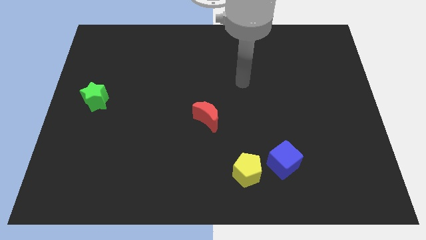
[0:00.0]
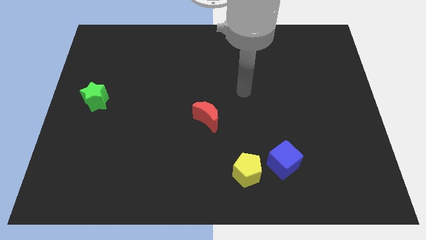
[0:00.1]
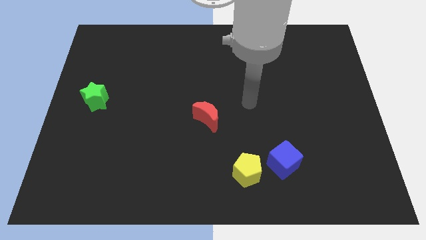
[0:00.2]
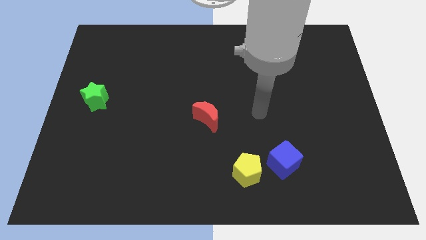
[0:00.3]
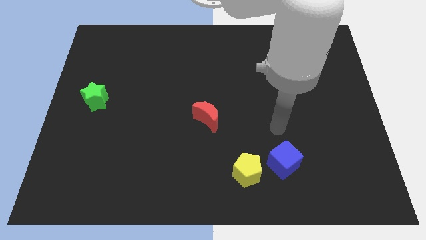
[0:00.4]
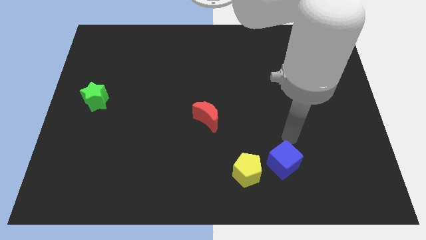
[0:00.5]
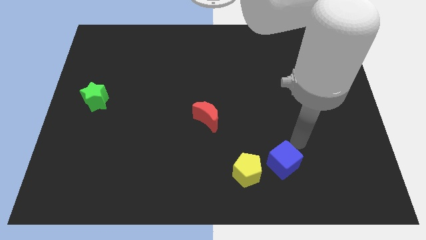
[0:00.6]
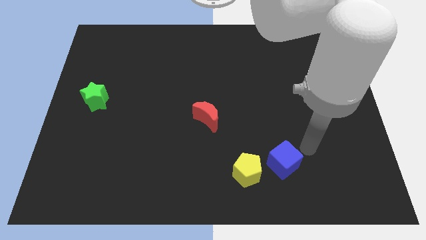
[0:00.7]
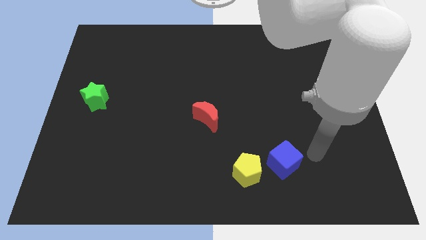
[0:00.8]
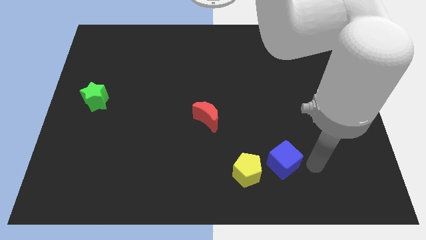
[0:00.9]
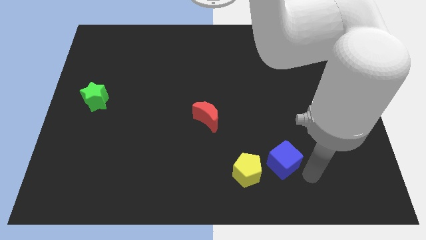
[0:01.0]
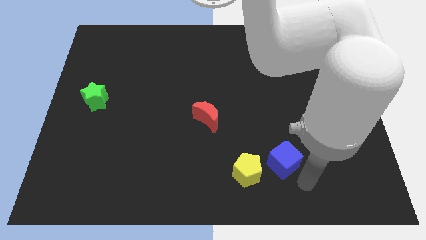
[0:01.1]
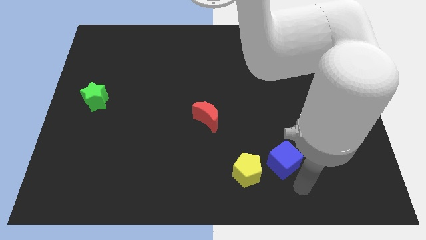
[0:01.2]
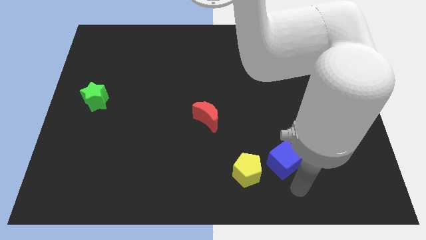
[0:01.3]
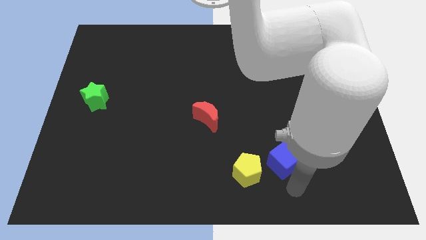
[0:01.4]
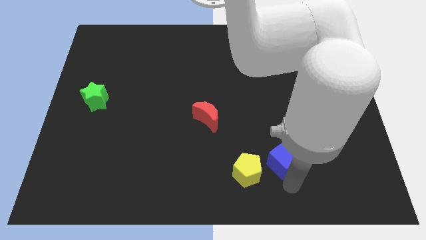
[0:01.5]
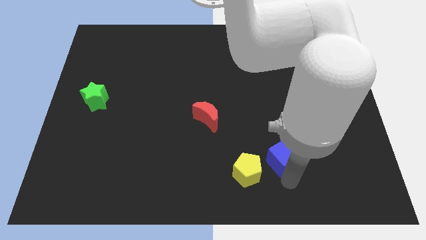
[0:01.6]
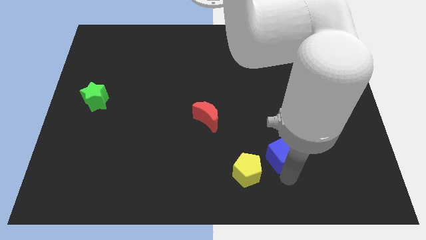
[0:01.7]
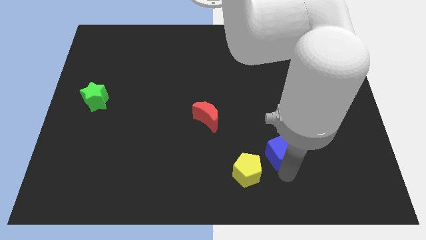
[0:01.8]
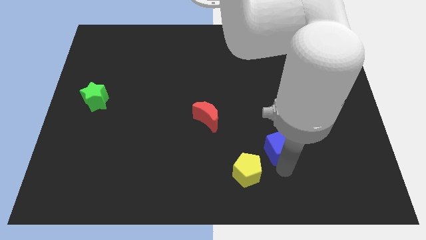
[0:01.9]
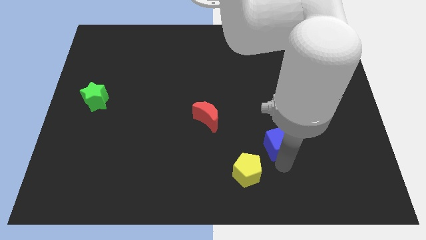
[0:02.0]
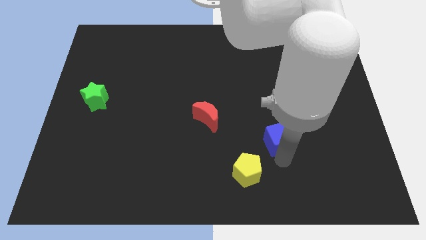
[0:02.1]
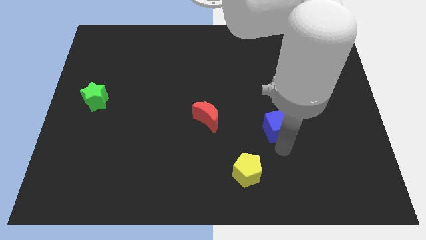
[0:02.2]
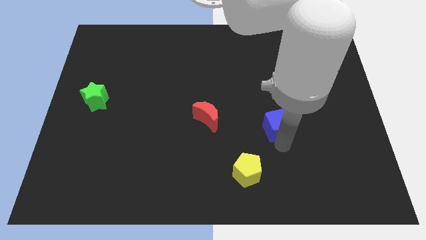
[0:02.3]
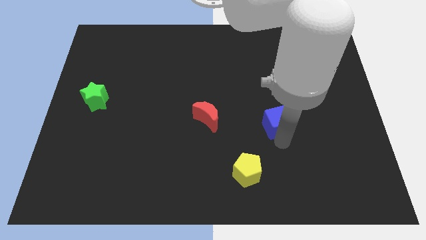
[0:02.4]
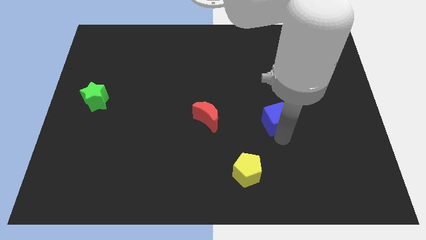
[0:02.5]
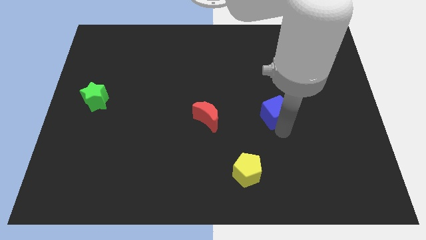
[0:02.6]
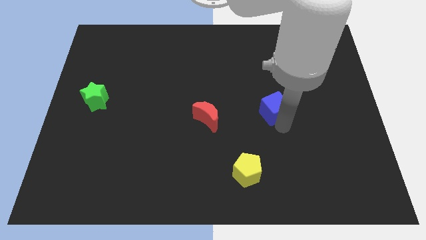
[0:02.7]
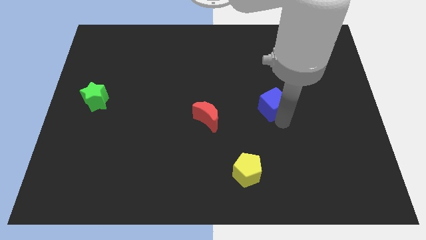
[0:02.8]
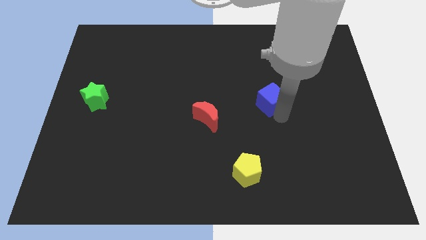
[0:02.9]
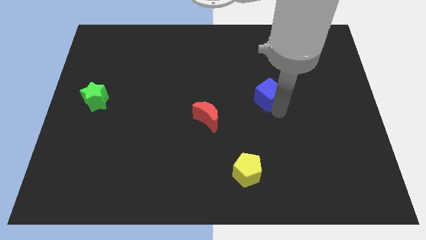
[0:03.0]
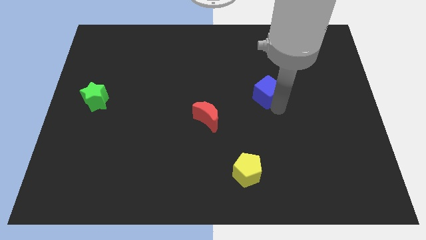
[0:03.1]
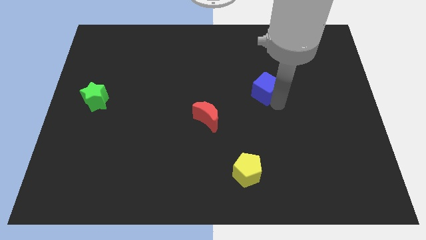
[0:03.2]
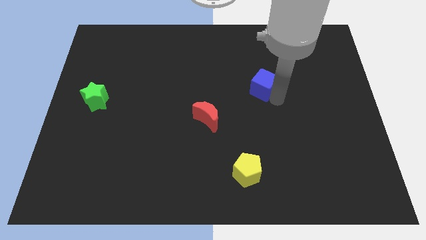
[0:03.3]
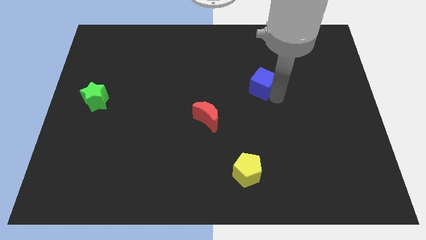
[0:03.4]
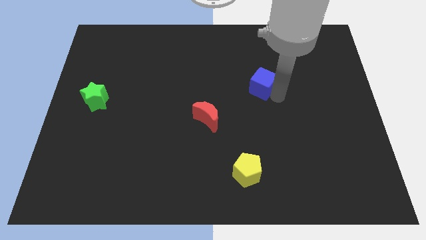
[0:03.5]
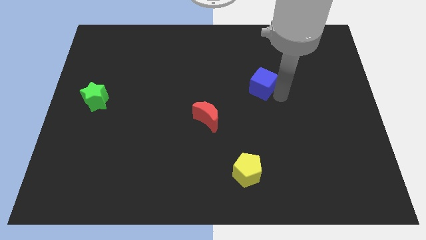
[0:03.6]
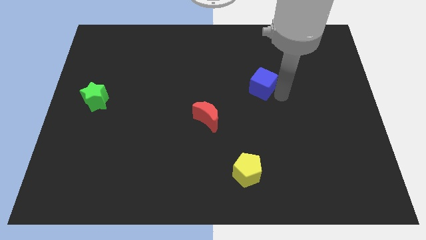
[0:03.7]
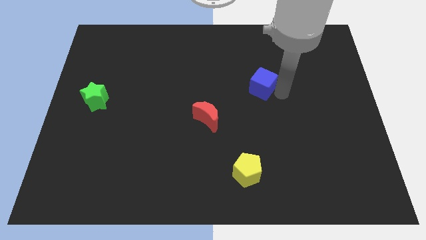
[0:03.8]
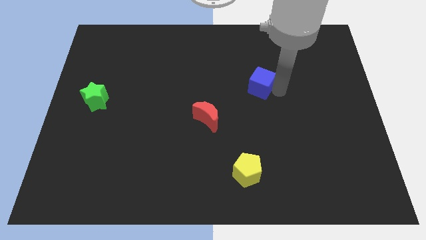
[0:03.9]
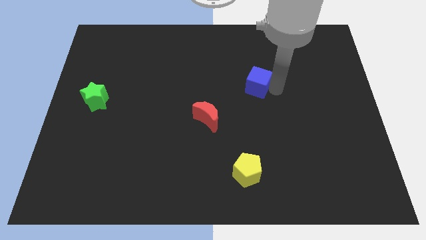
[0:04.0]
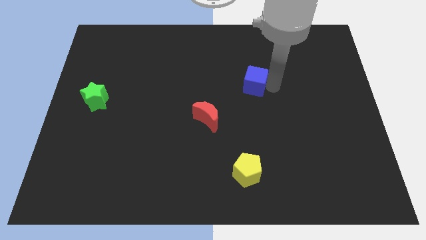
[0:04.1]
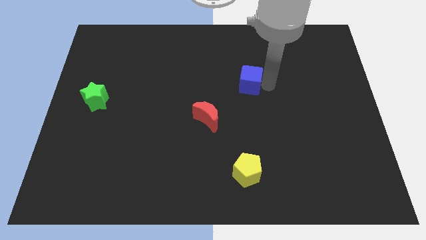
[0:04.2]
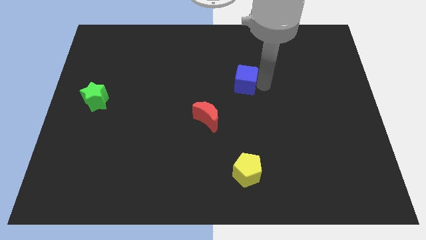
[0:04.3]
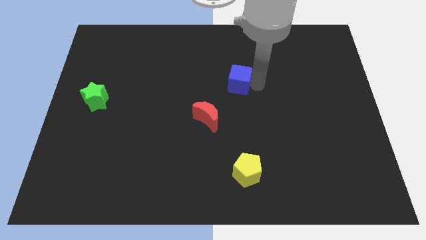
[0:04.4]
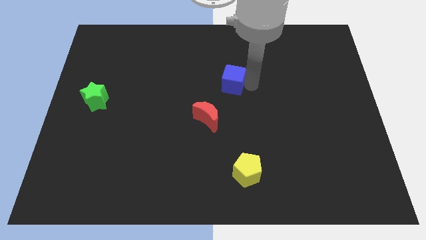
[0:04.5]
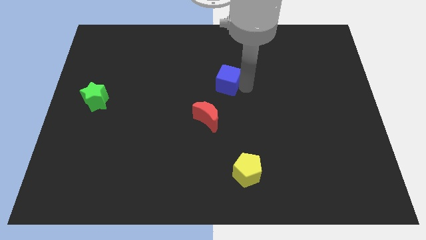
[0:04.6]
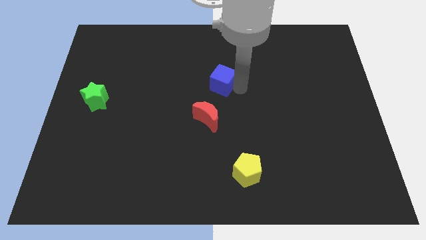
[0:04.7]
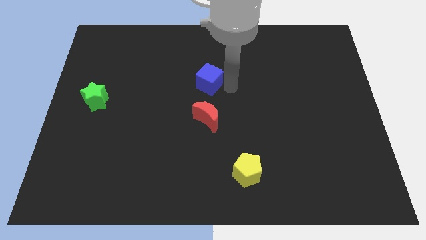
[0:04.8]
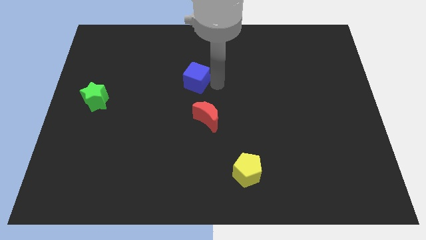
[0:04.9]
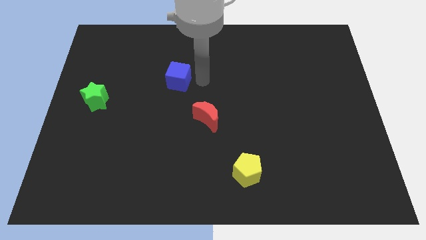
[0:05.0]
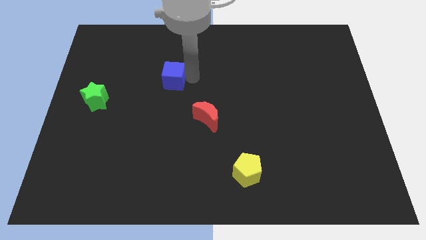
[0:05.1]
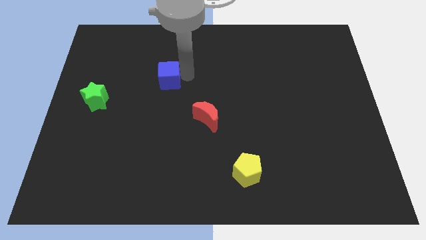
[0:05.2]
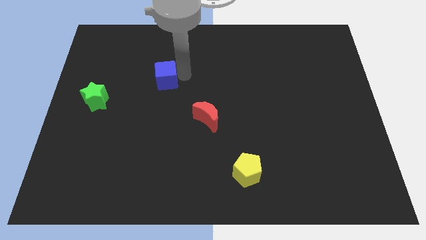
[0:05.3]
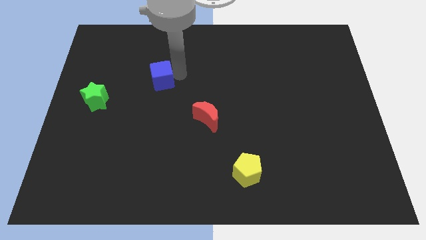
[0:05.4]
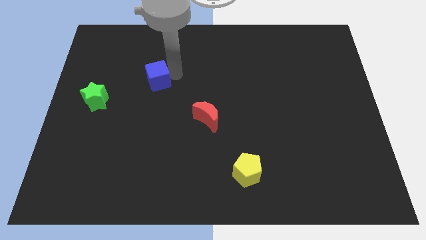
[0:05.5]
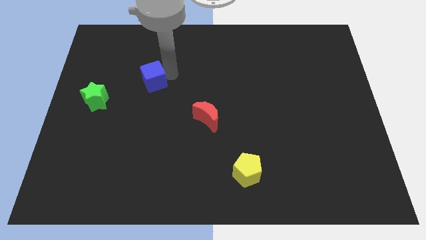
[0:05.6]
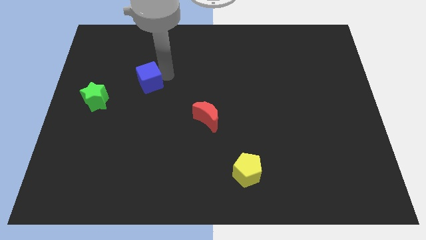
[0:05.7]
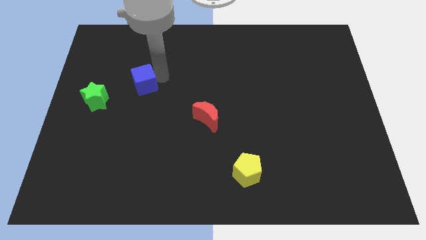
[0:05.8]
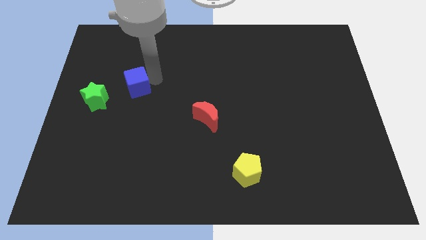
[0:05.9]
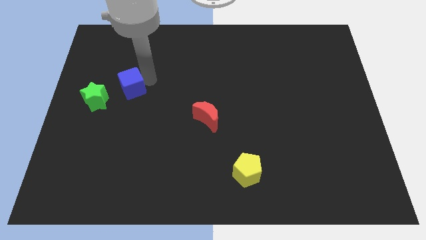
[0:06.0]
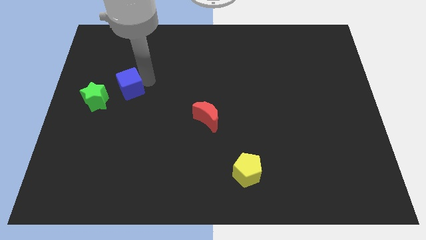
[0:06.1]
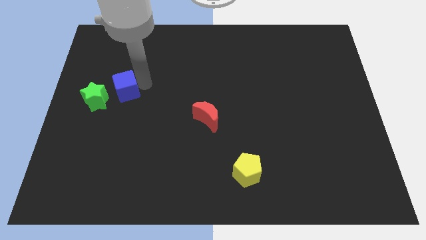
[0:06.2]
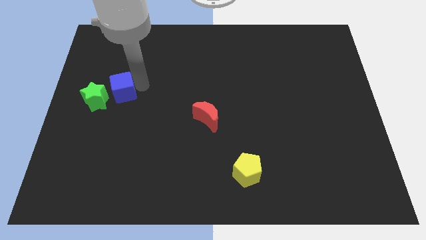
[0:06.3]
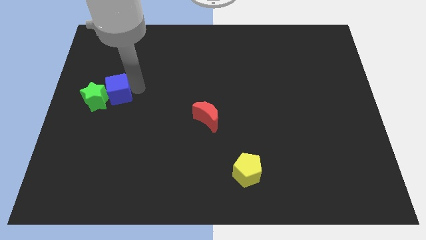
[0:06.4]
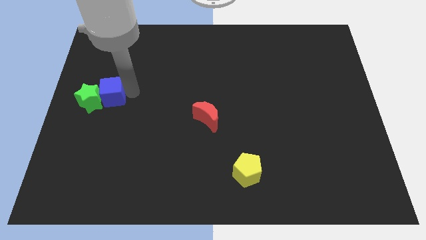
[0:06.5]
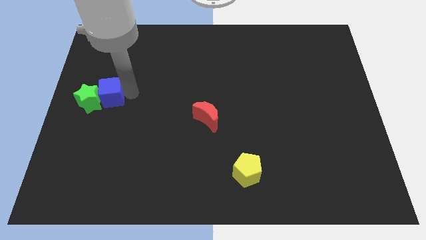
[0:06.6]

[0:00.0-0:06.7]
put the cube to the green block

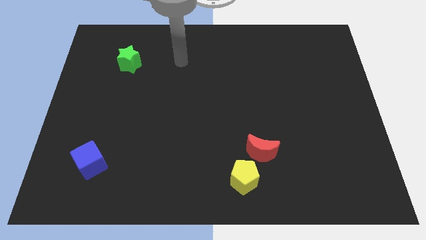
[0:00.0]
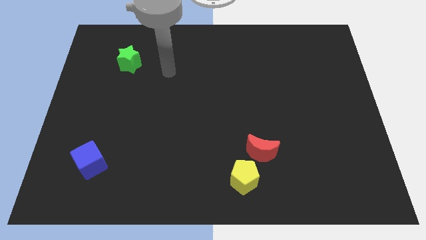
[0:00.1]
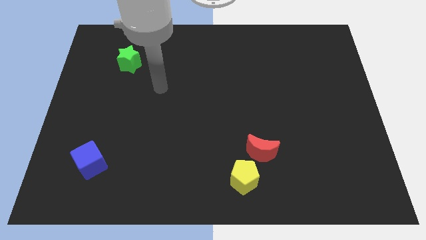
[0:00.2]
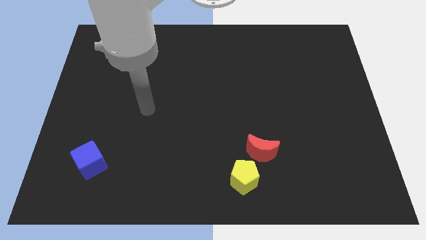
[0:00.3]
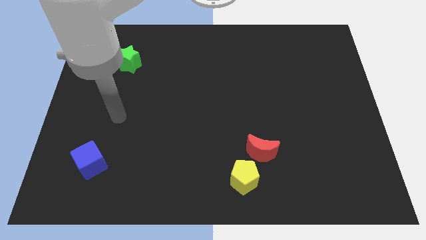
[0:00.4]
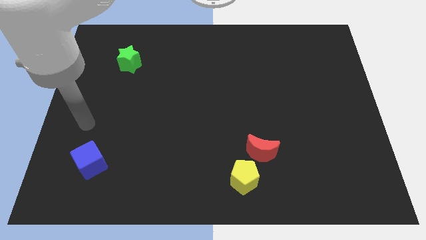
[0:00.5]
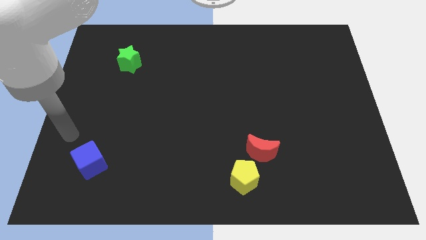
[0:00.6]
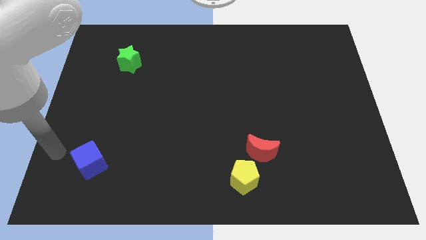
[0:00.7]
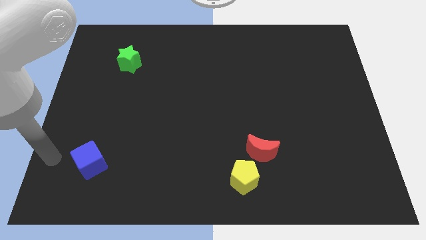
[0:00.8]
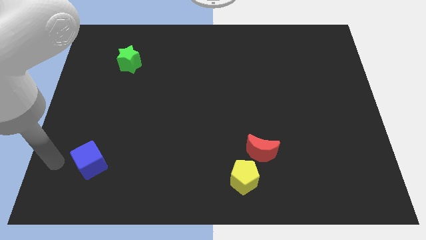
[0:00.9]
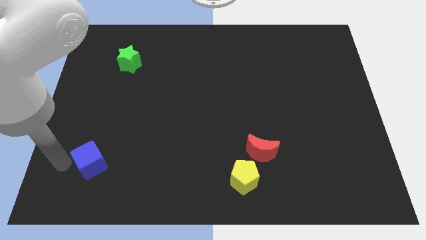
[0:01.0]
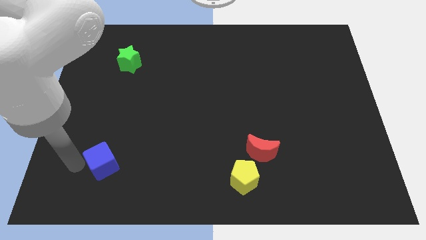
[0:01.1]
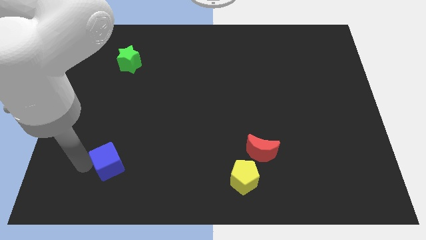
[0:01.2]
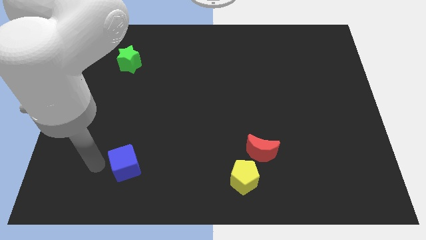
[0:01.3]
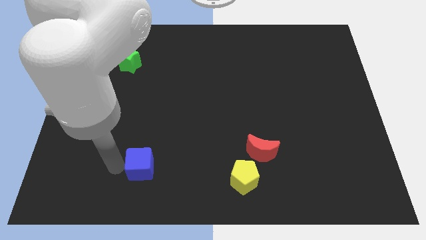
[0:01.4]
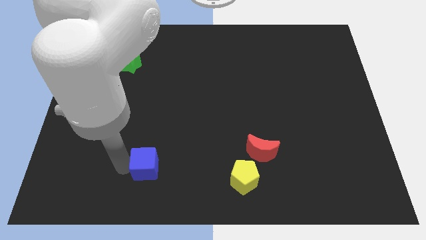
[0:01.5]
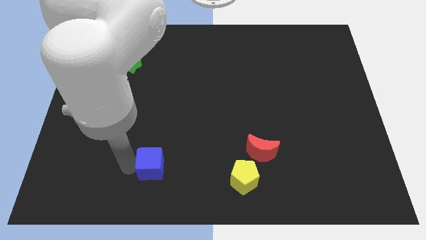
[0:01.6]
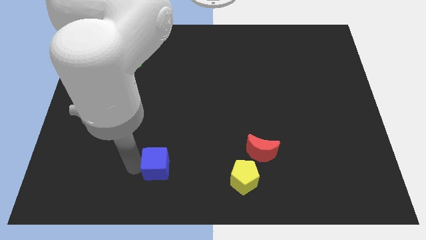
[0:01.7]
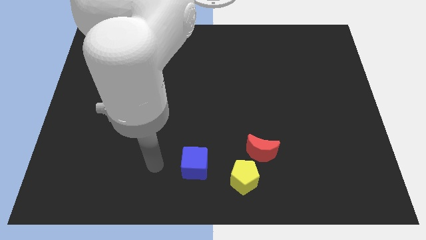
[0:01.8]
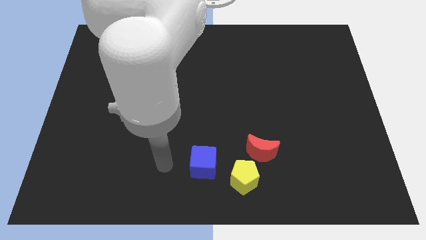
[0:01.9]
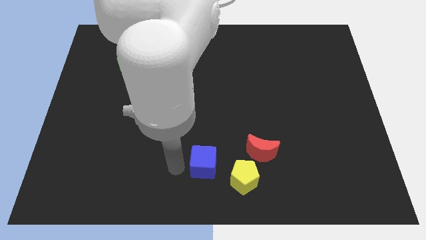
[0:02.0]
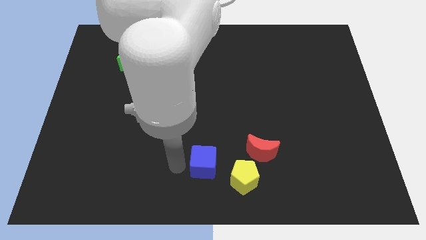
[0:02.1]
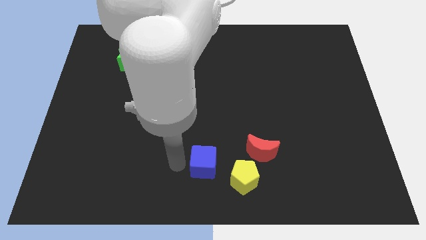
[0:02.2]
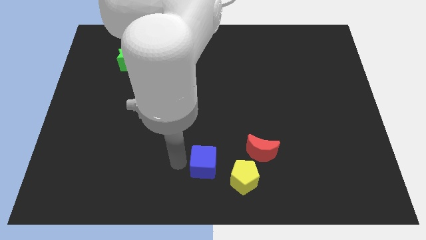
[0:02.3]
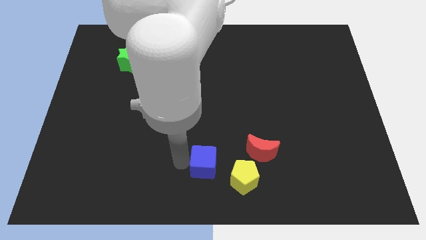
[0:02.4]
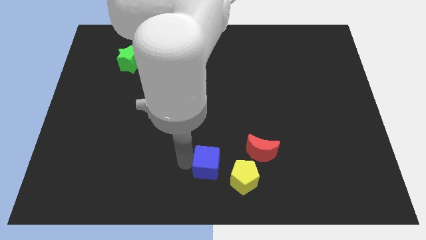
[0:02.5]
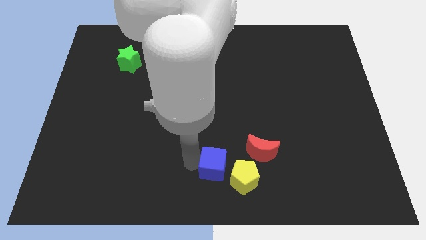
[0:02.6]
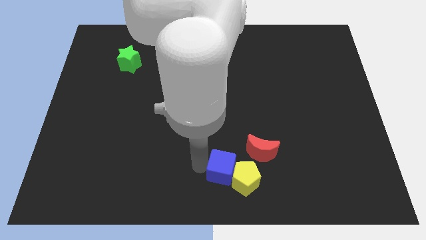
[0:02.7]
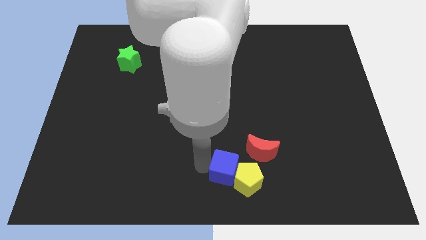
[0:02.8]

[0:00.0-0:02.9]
slide the blue block next to the pentagon
